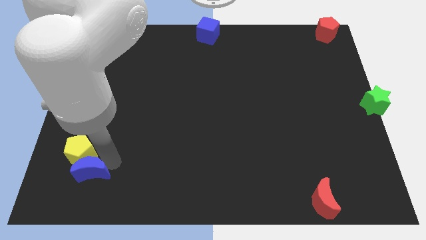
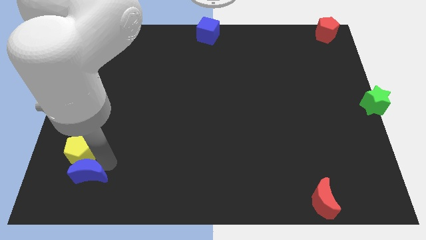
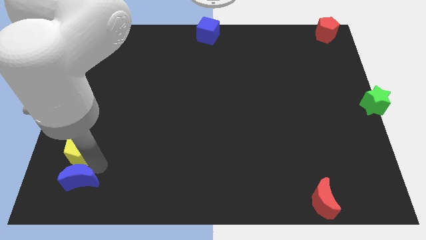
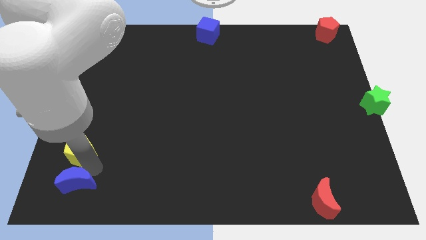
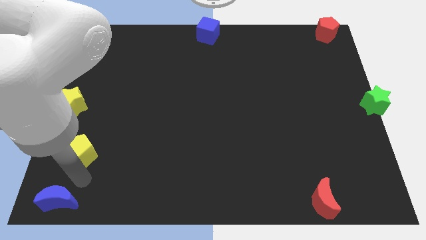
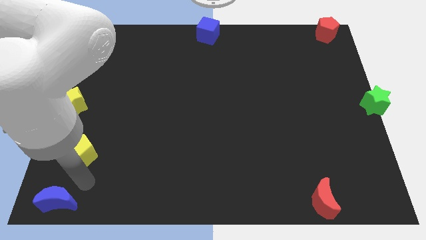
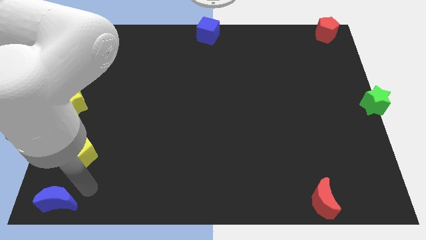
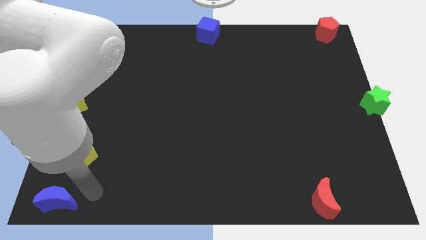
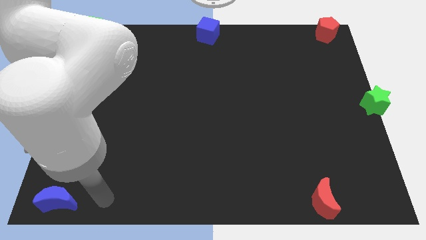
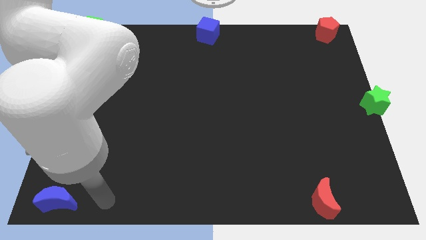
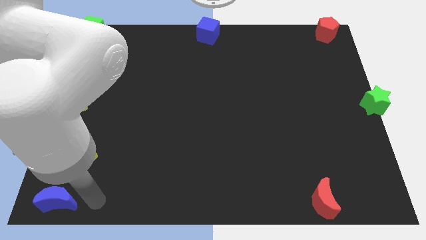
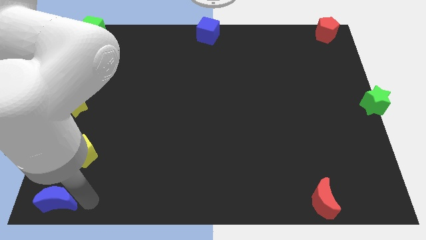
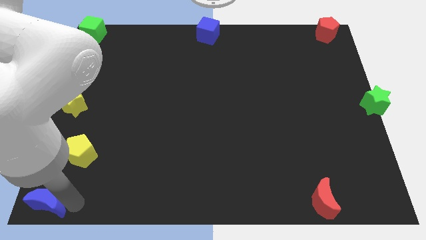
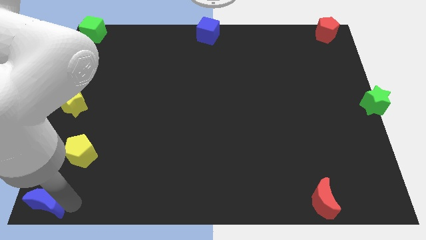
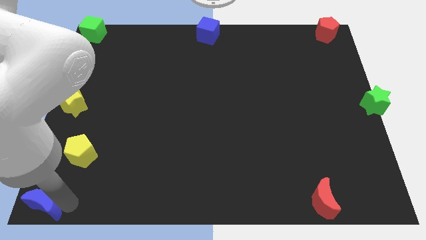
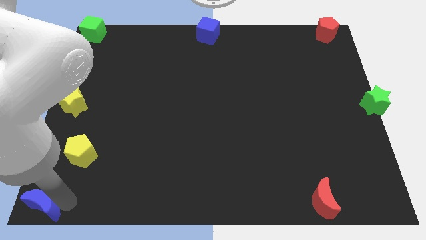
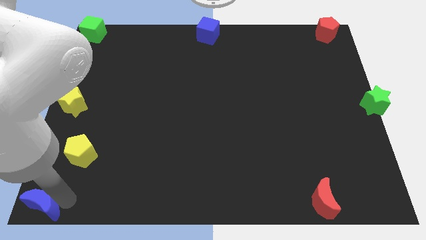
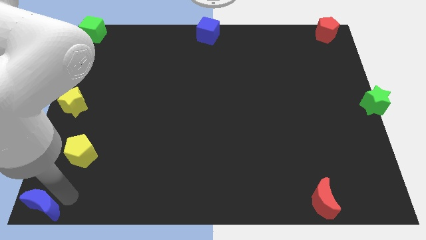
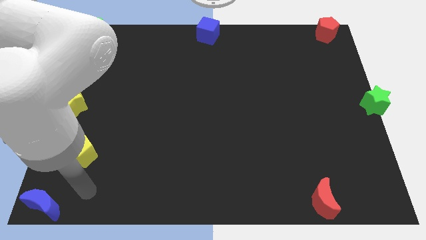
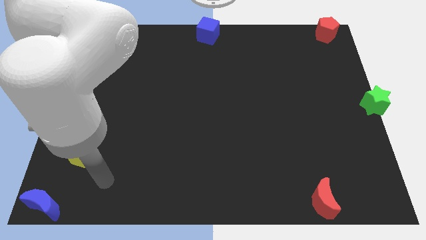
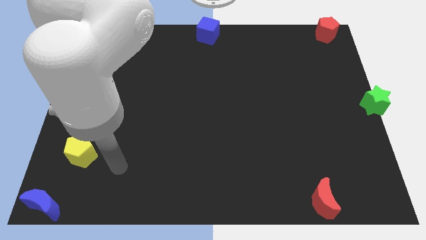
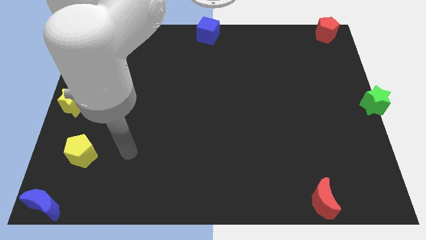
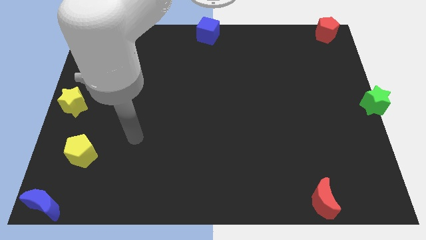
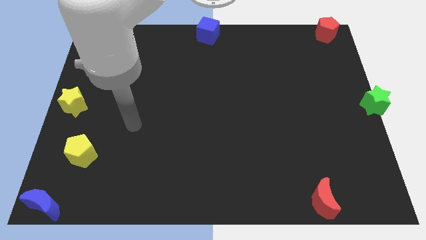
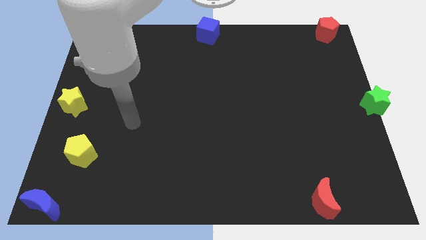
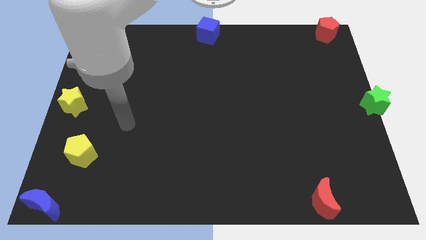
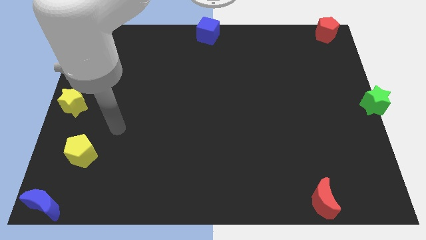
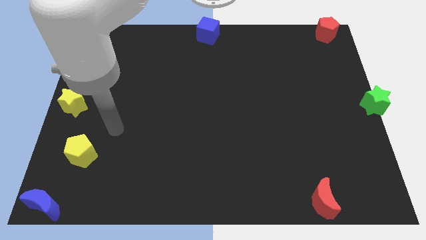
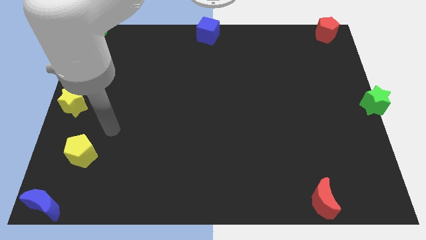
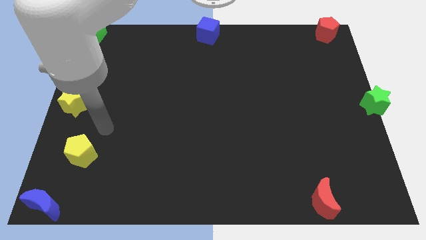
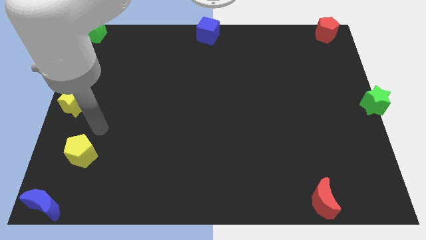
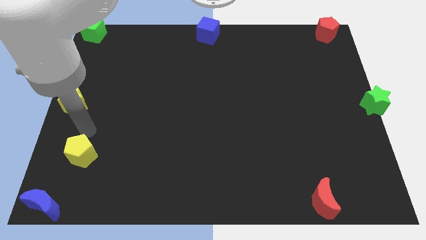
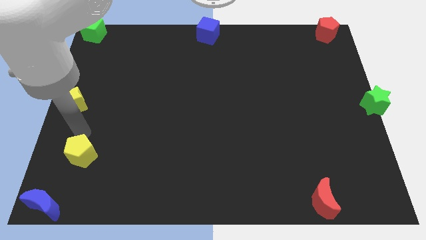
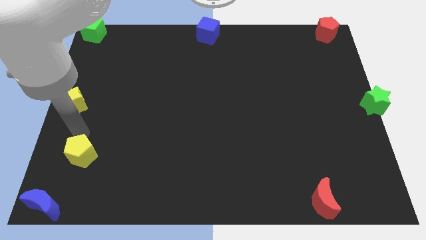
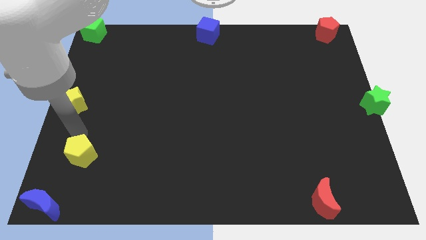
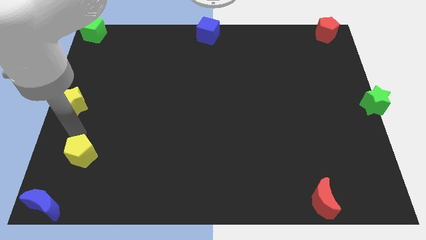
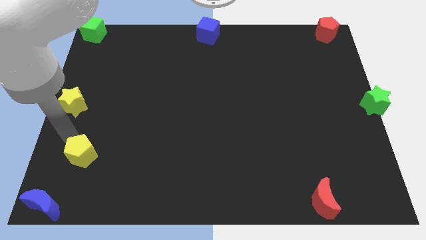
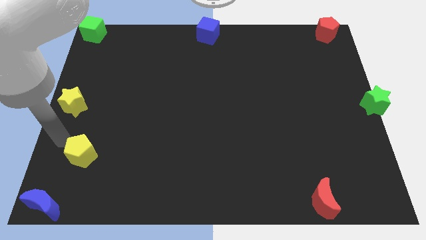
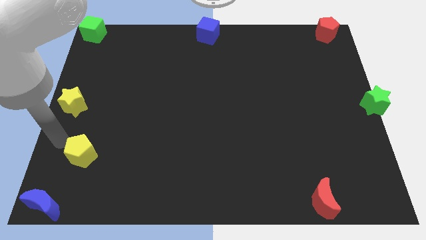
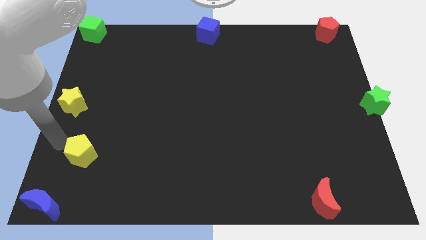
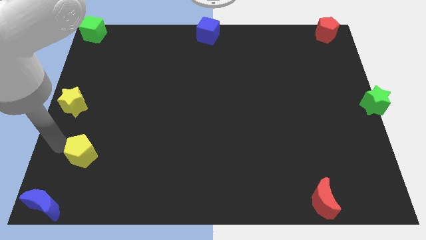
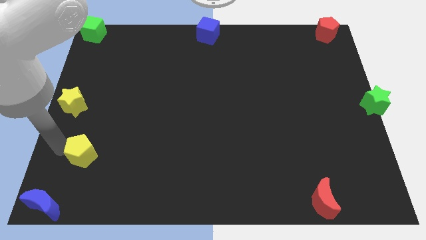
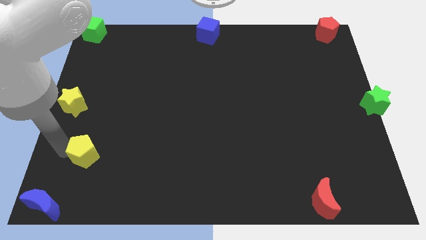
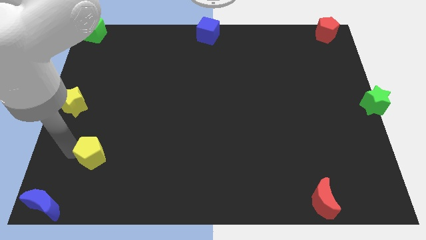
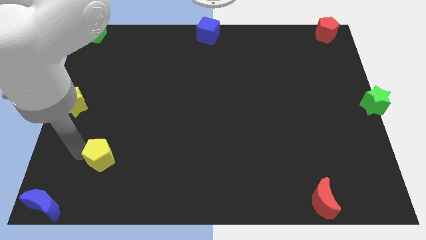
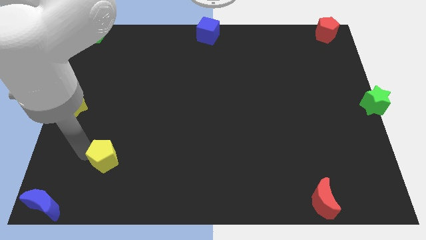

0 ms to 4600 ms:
drag the blue moon to the bottom left

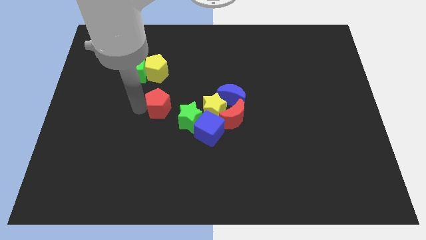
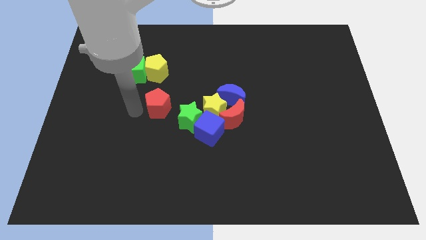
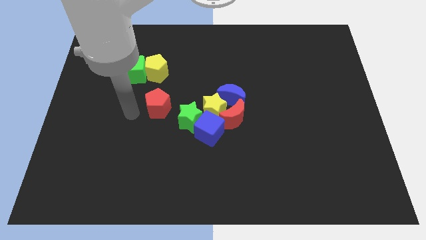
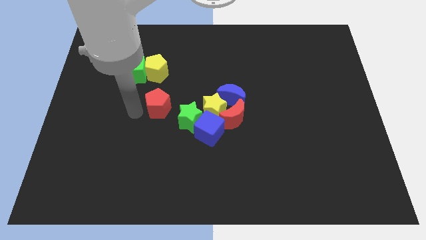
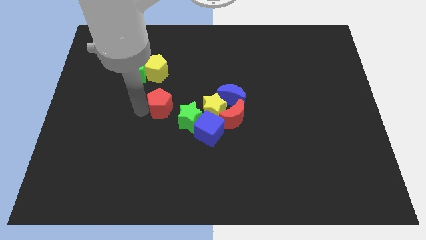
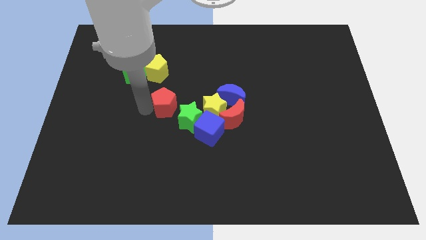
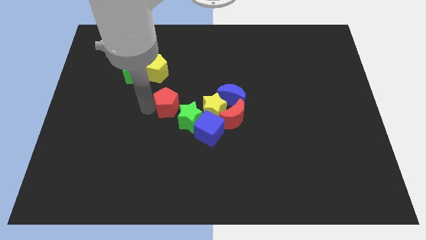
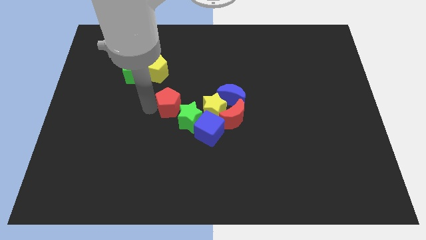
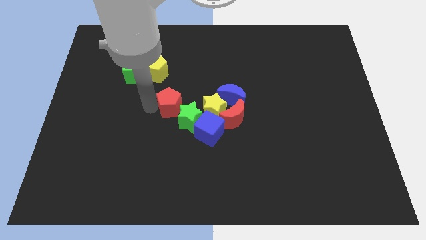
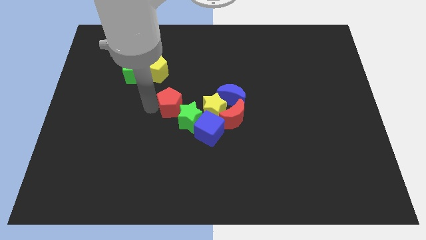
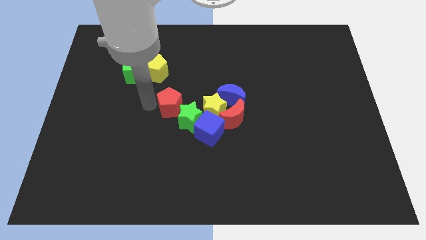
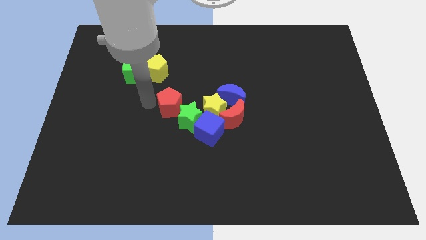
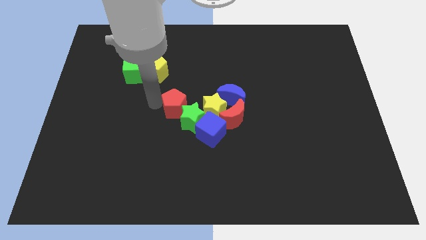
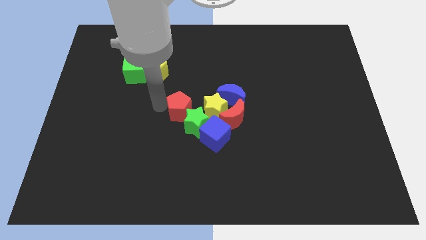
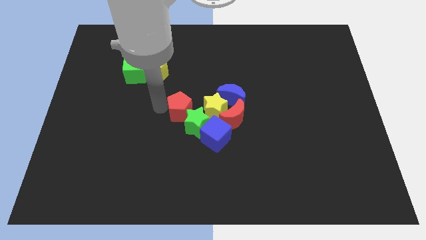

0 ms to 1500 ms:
push the red pentagon into the green star

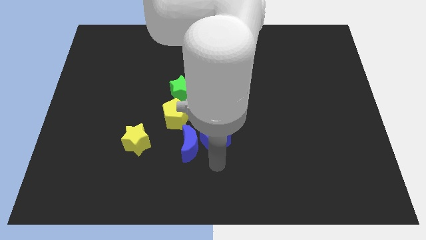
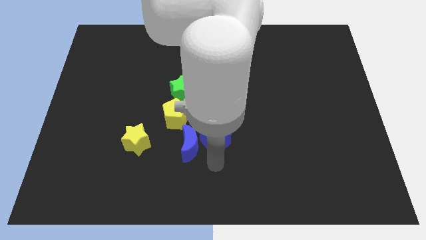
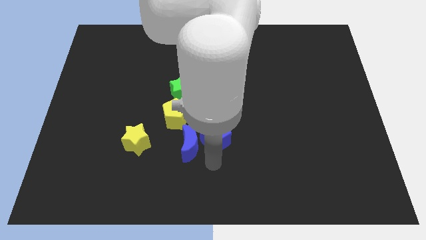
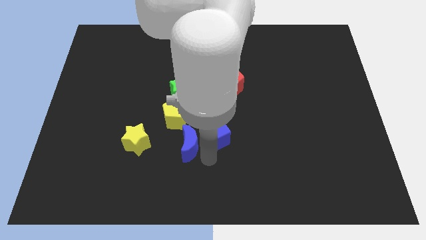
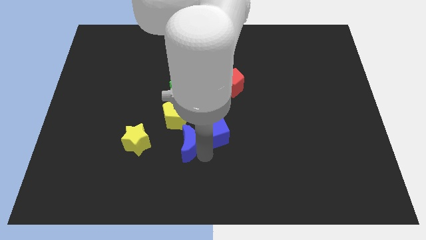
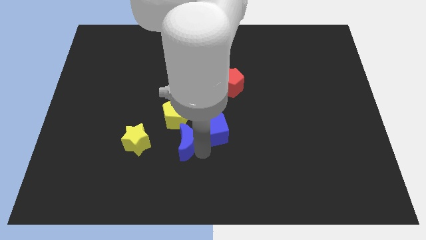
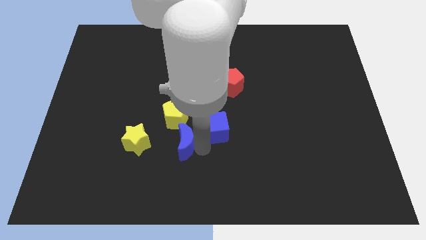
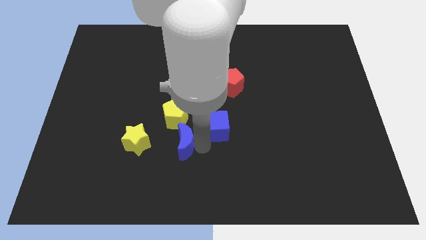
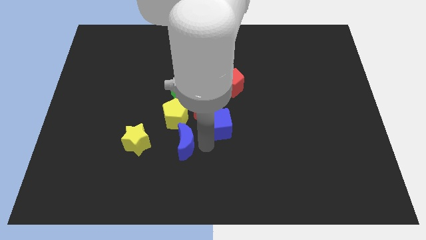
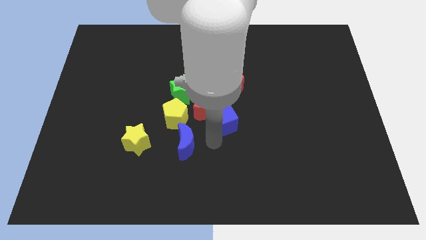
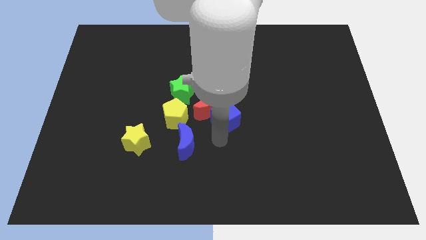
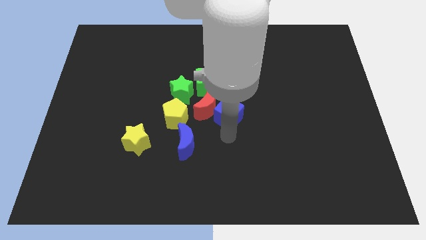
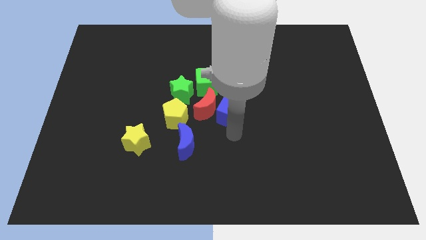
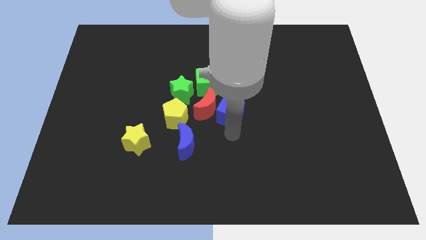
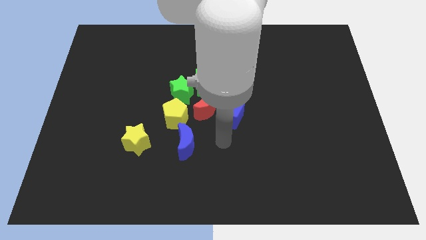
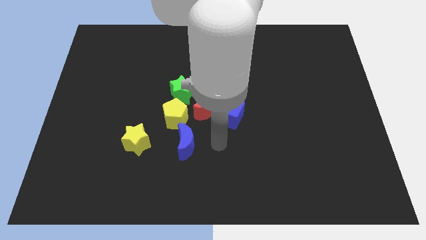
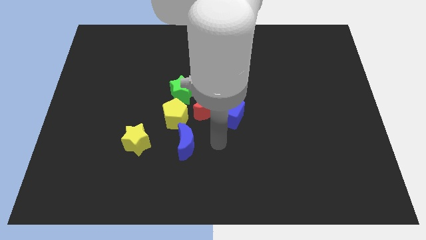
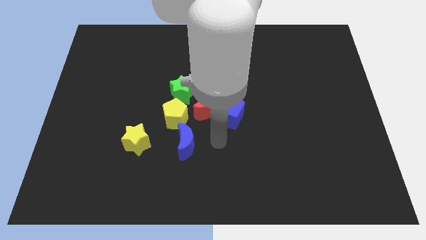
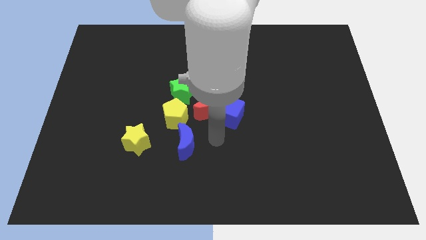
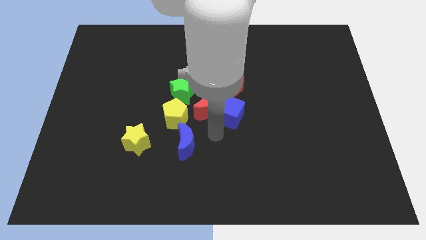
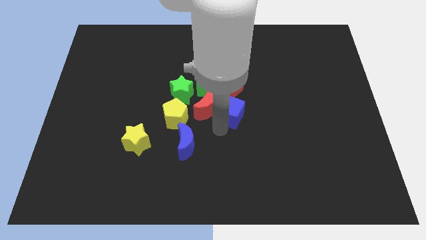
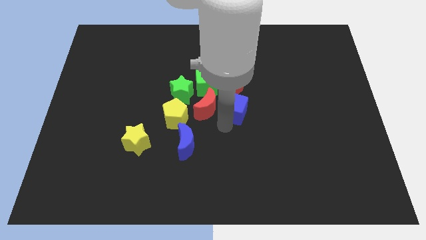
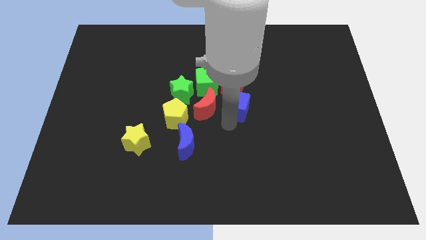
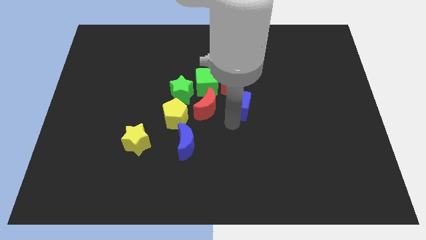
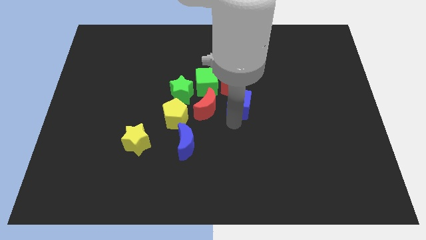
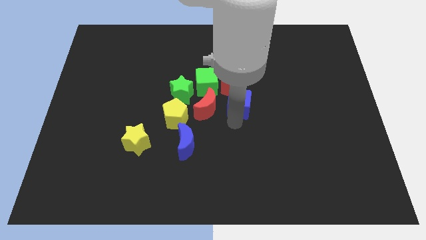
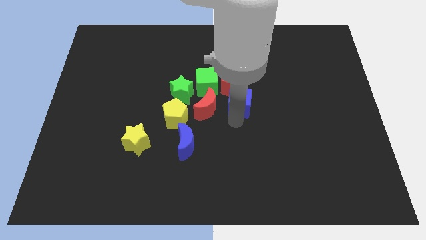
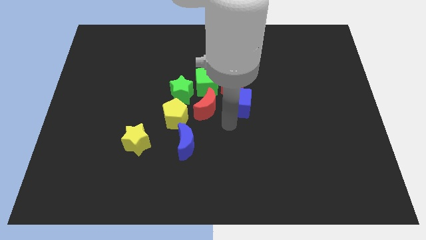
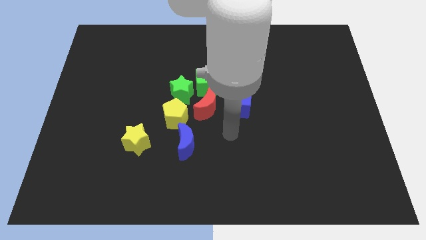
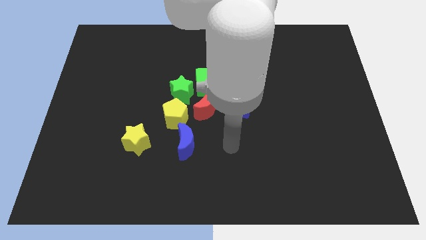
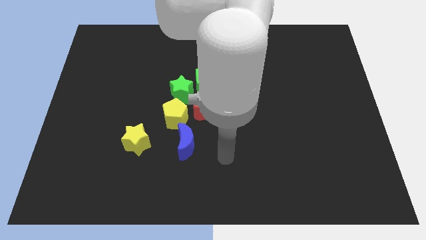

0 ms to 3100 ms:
place the blue cube in between the red blocks
